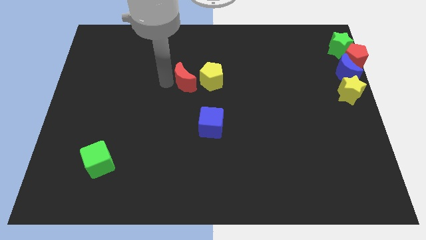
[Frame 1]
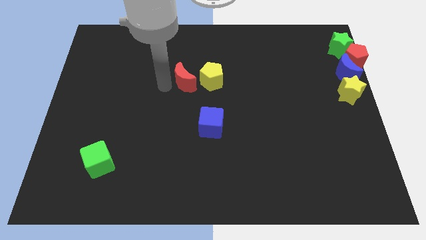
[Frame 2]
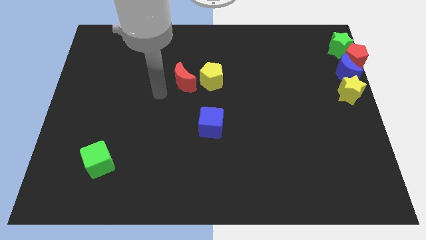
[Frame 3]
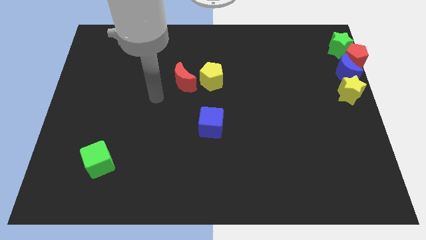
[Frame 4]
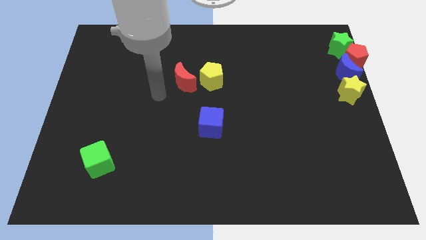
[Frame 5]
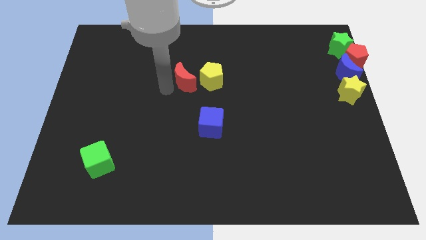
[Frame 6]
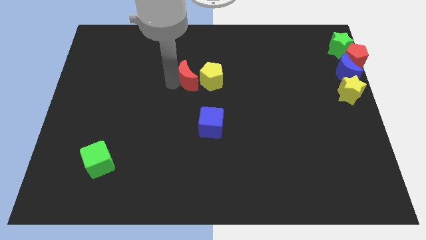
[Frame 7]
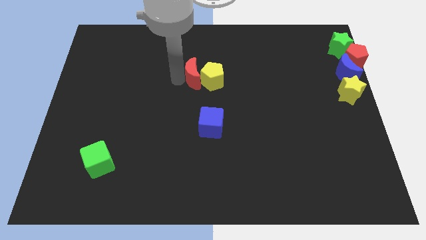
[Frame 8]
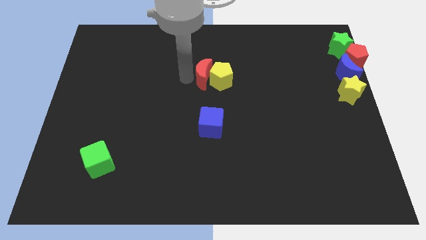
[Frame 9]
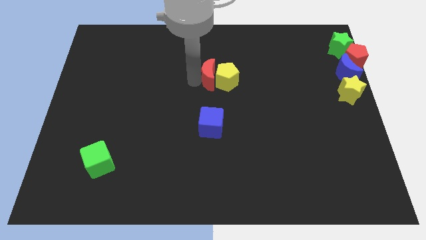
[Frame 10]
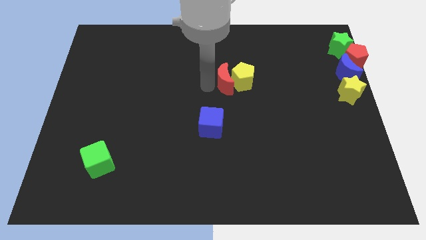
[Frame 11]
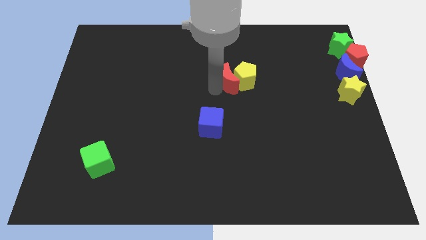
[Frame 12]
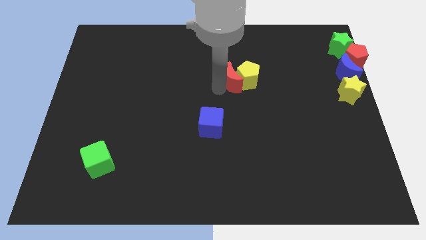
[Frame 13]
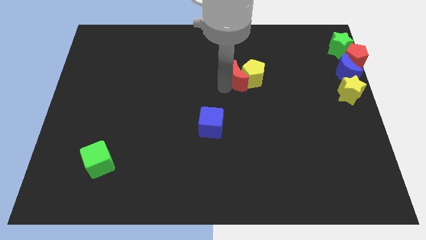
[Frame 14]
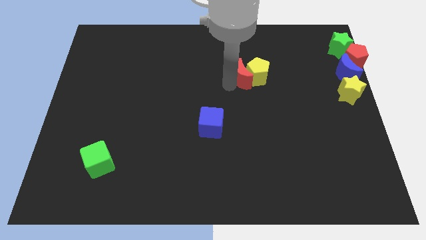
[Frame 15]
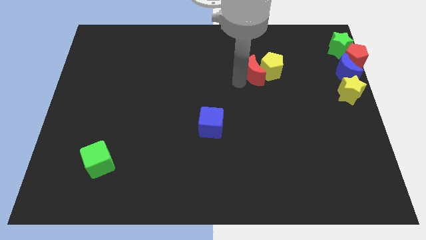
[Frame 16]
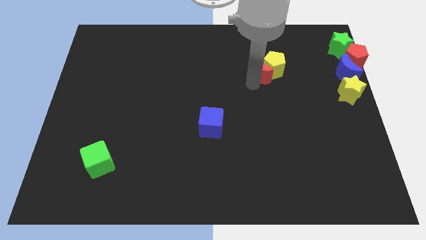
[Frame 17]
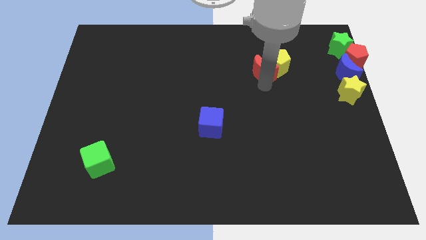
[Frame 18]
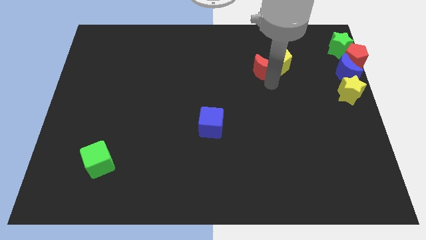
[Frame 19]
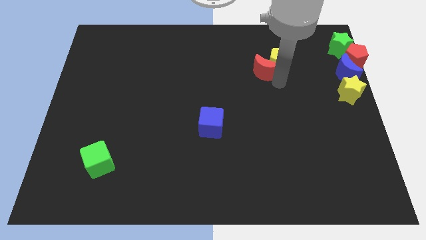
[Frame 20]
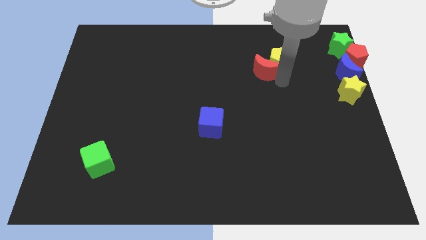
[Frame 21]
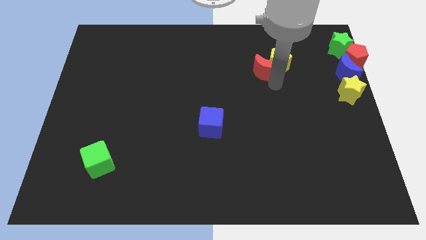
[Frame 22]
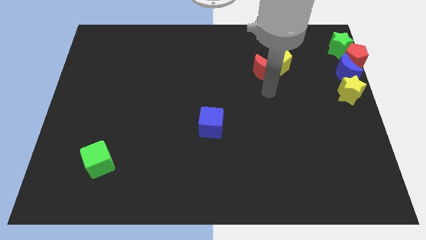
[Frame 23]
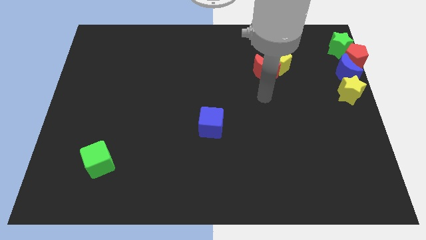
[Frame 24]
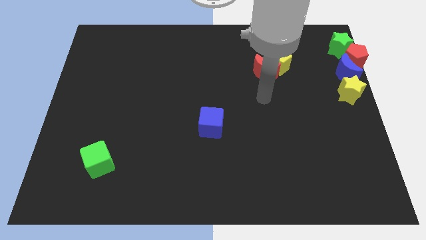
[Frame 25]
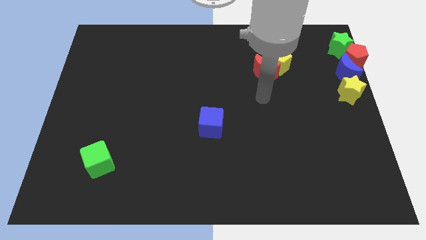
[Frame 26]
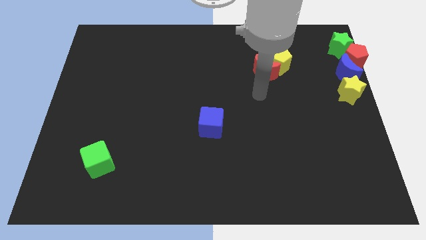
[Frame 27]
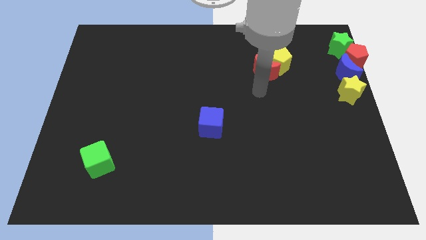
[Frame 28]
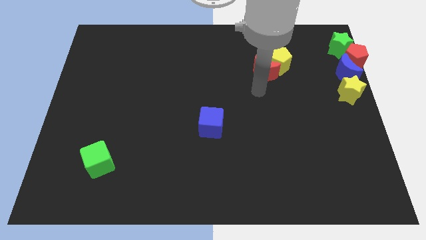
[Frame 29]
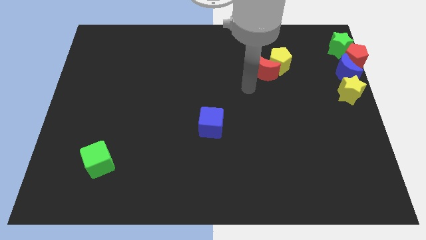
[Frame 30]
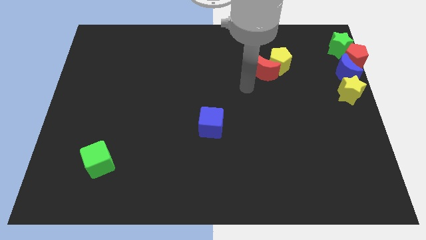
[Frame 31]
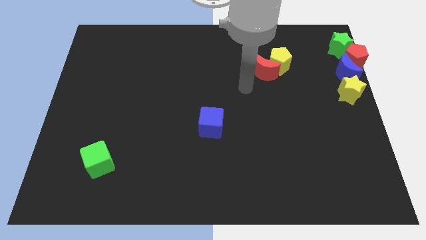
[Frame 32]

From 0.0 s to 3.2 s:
slide the red moon and yellow pentagon diagonally to the blue cube

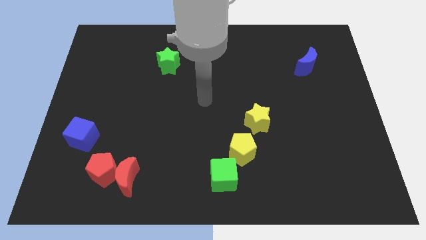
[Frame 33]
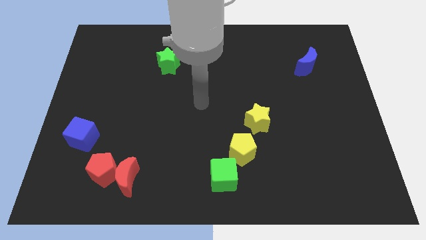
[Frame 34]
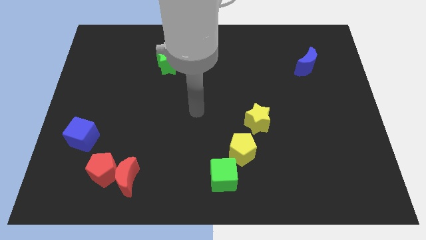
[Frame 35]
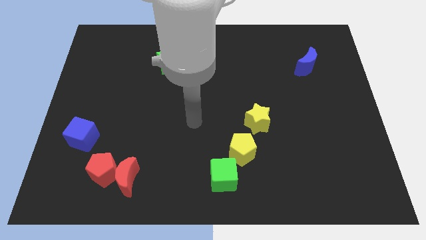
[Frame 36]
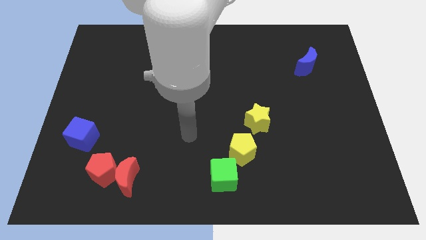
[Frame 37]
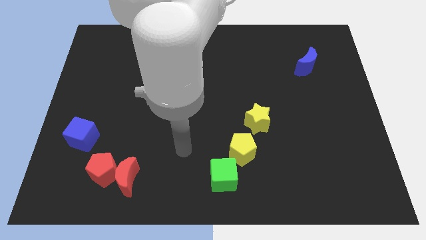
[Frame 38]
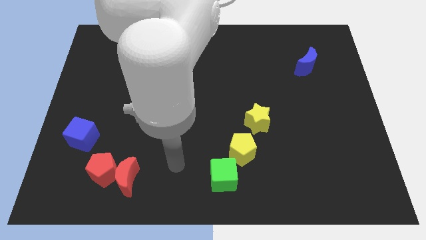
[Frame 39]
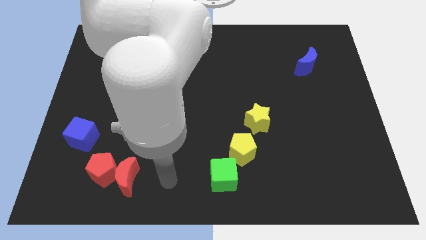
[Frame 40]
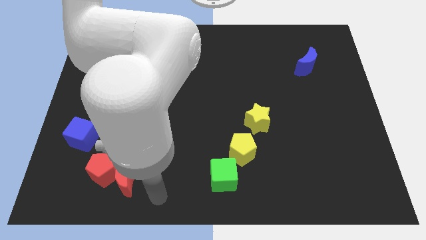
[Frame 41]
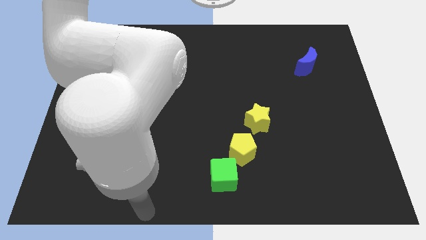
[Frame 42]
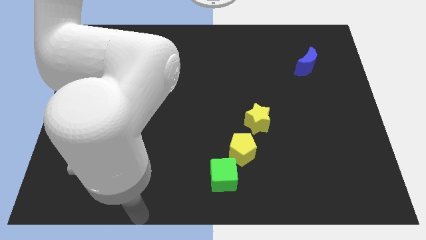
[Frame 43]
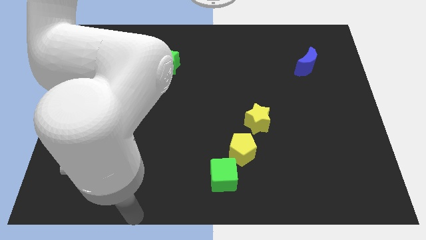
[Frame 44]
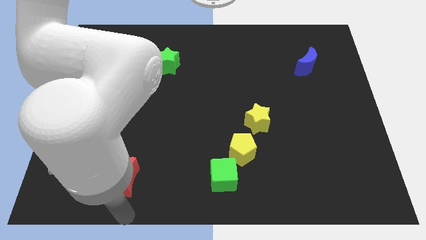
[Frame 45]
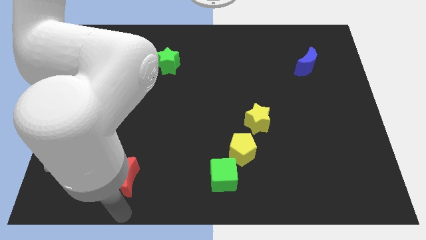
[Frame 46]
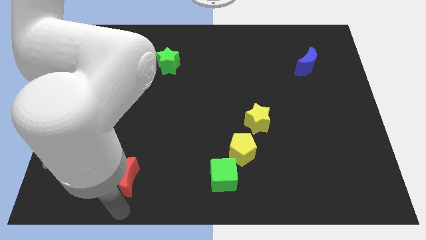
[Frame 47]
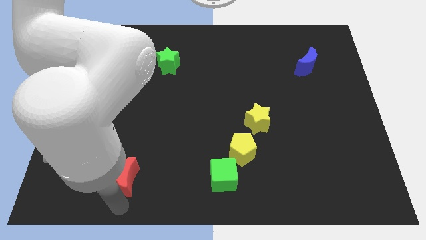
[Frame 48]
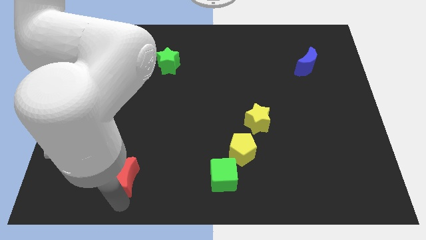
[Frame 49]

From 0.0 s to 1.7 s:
place the arm down to the red moon

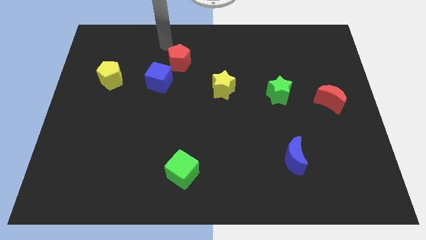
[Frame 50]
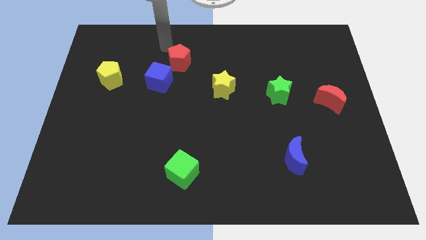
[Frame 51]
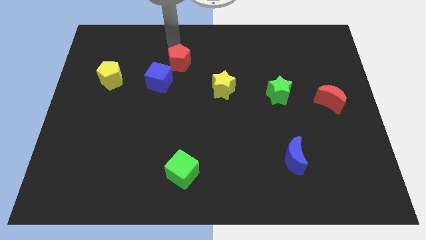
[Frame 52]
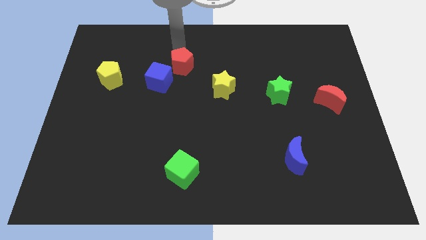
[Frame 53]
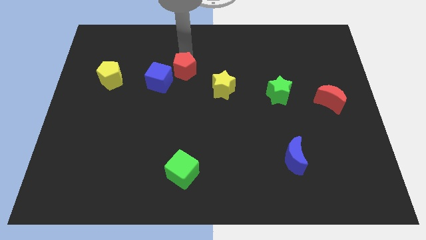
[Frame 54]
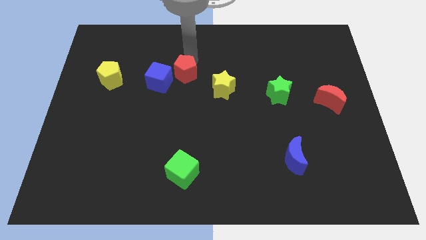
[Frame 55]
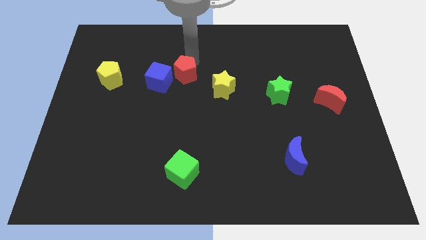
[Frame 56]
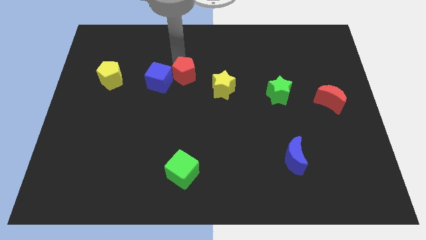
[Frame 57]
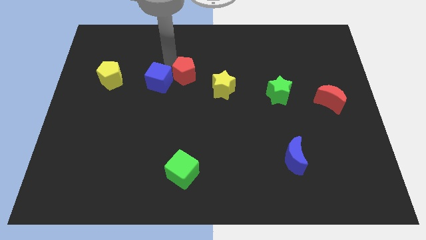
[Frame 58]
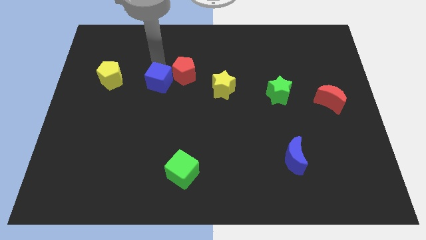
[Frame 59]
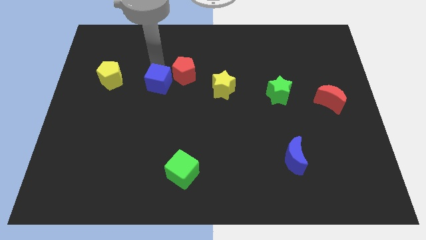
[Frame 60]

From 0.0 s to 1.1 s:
move red pentagon into blue cube

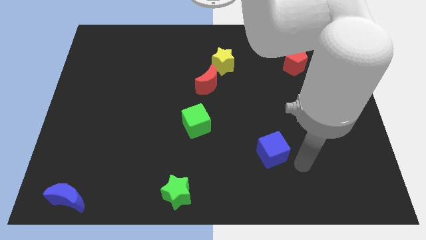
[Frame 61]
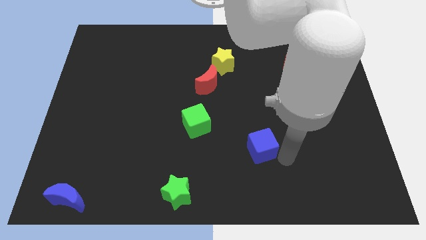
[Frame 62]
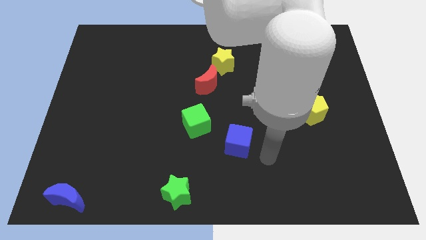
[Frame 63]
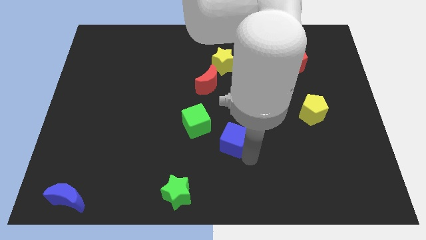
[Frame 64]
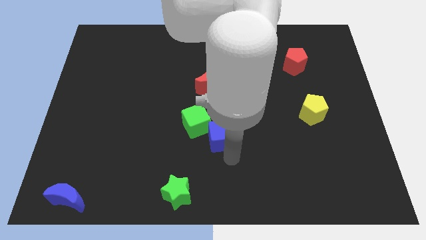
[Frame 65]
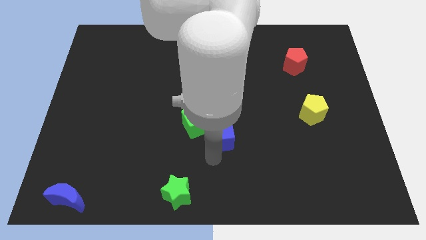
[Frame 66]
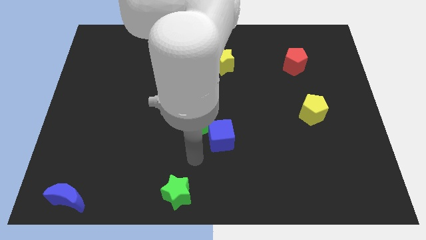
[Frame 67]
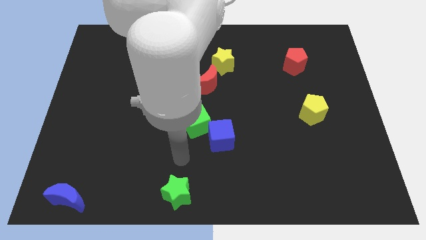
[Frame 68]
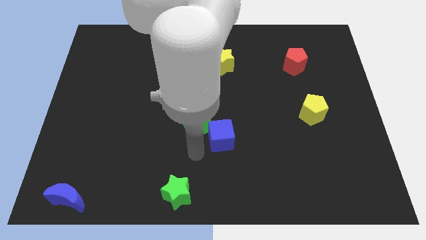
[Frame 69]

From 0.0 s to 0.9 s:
push the blue cube close to the green cube

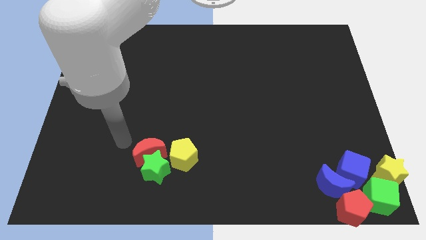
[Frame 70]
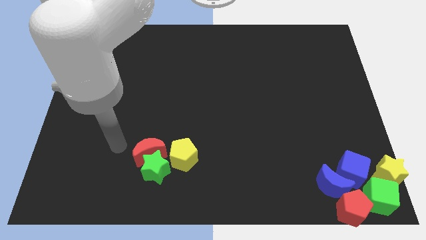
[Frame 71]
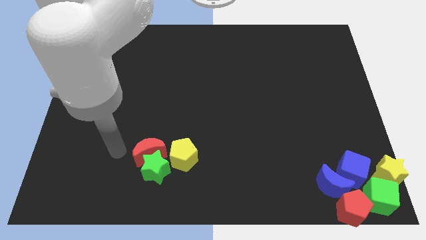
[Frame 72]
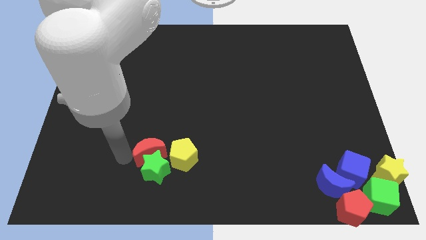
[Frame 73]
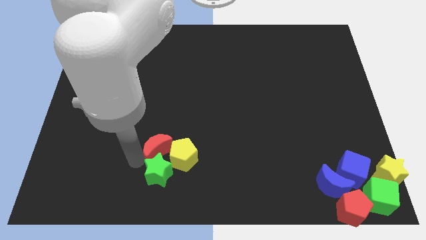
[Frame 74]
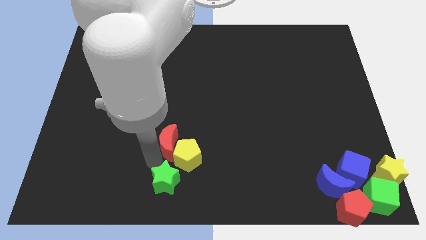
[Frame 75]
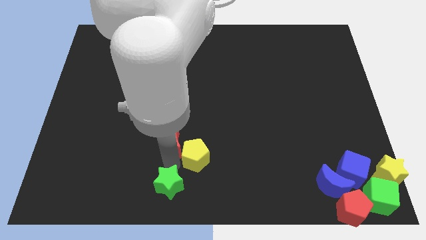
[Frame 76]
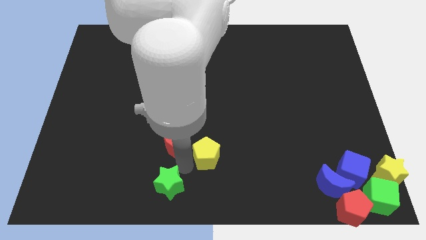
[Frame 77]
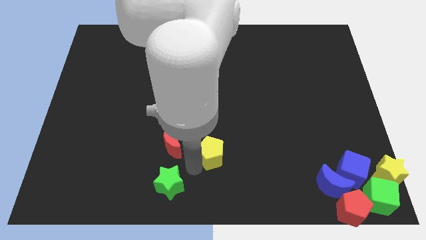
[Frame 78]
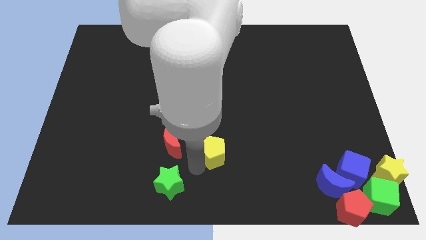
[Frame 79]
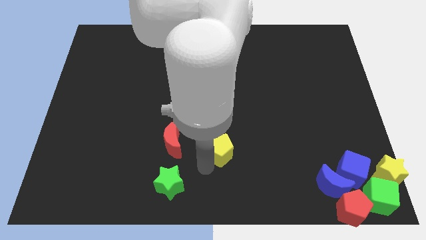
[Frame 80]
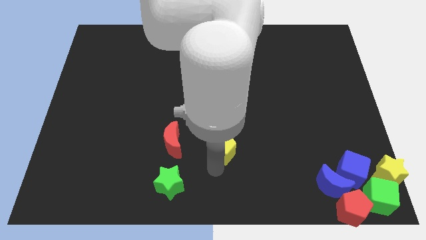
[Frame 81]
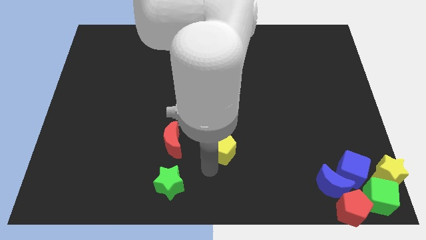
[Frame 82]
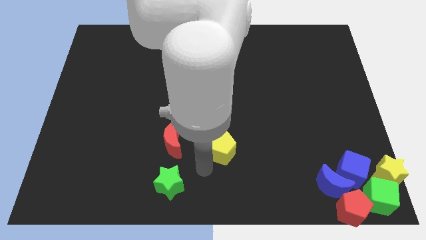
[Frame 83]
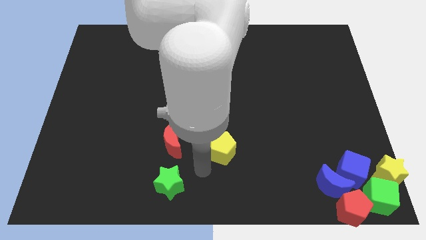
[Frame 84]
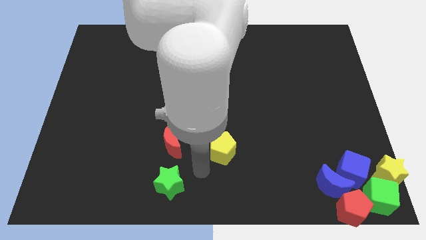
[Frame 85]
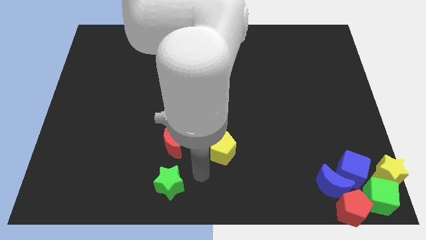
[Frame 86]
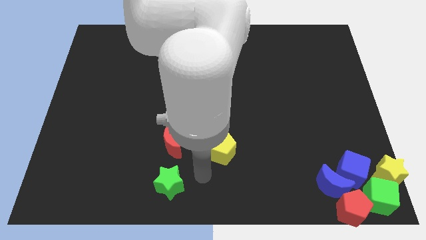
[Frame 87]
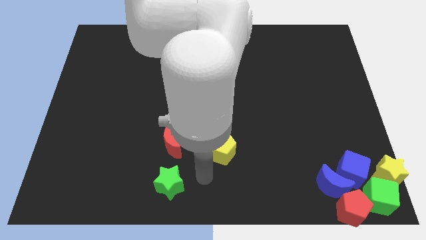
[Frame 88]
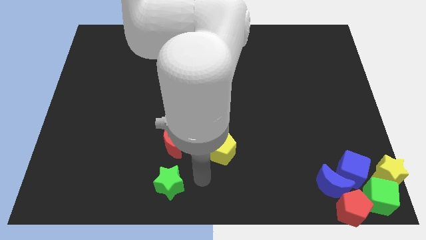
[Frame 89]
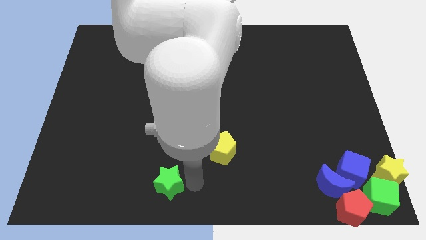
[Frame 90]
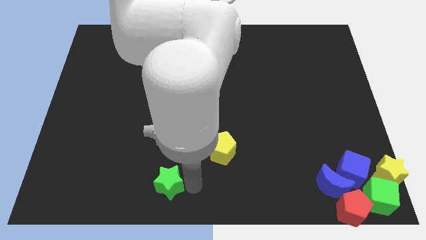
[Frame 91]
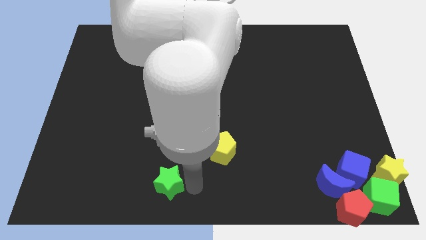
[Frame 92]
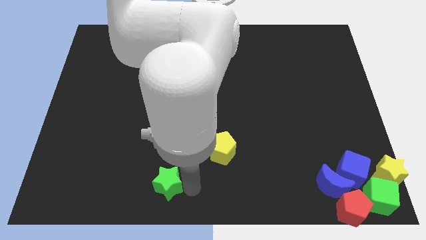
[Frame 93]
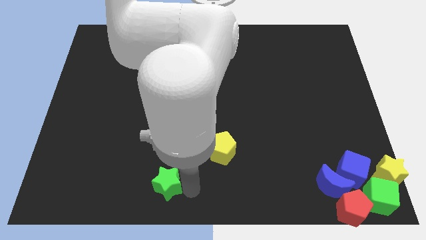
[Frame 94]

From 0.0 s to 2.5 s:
separate the yellow pentagon from red moon and green star
